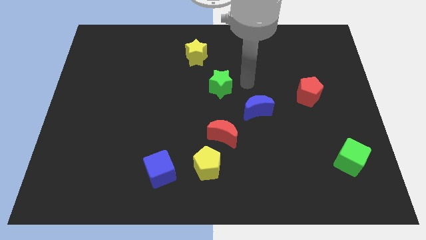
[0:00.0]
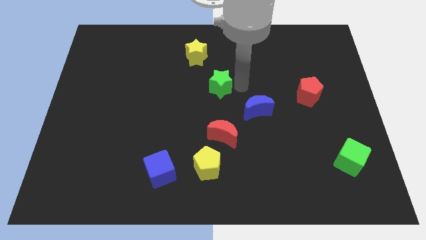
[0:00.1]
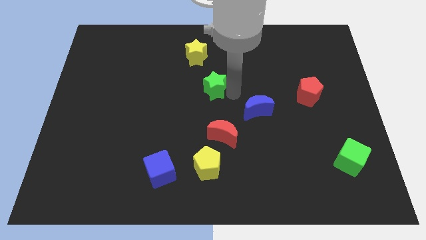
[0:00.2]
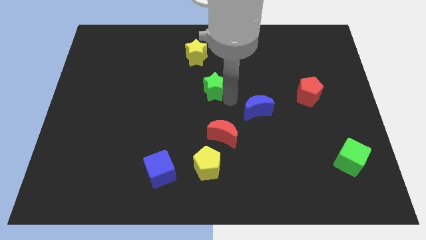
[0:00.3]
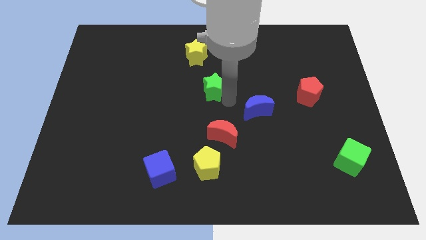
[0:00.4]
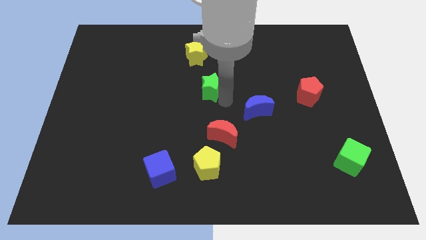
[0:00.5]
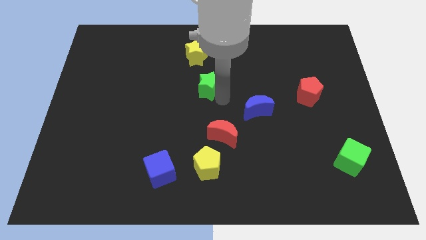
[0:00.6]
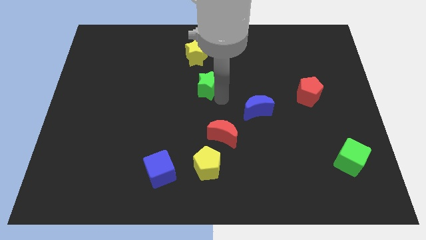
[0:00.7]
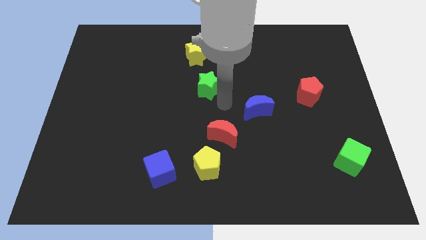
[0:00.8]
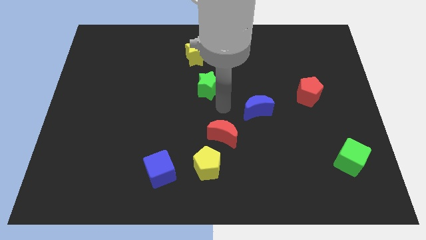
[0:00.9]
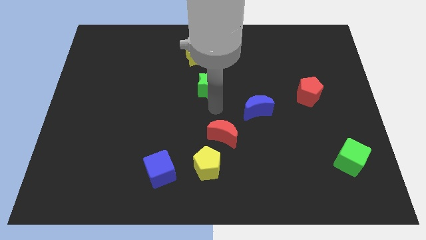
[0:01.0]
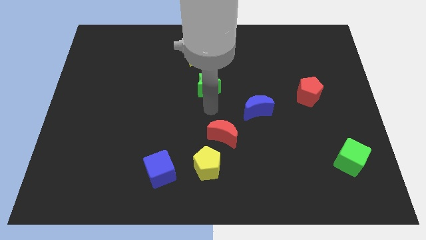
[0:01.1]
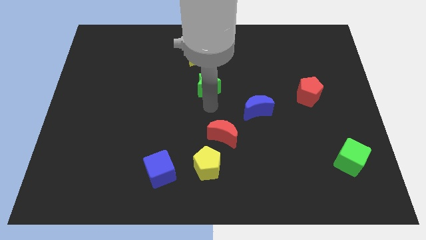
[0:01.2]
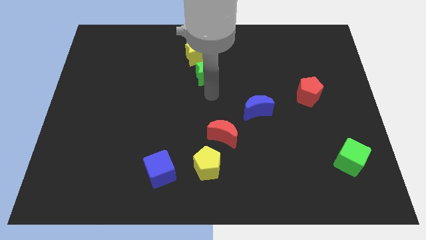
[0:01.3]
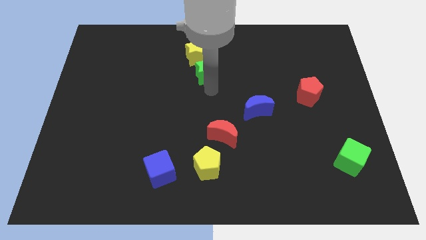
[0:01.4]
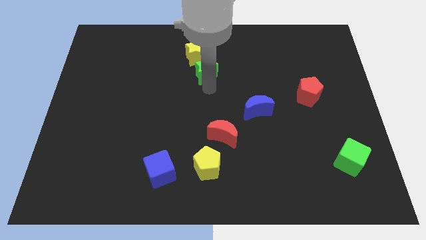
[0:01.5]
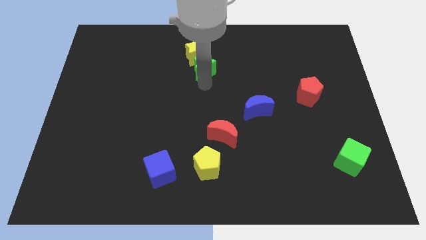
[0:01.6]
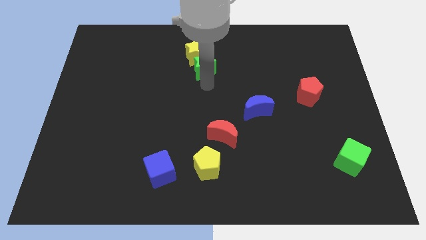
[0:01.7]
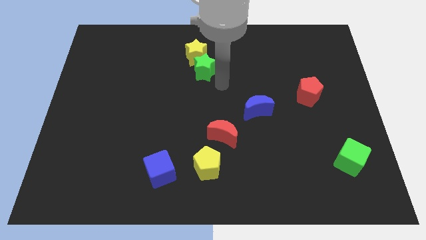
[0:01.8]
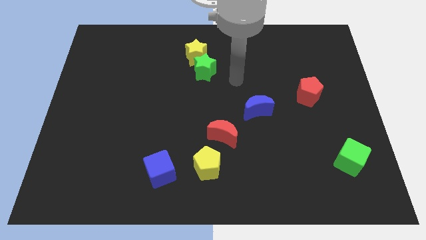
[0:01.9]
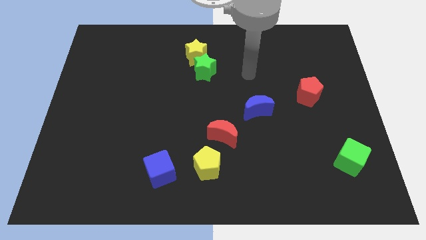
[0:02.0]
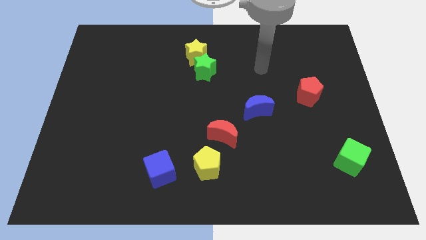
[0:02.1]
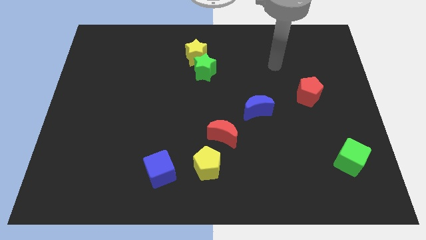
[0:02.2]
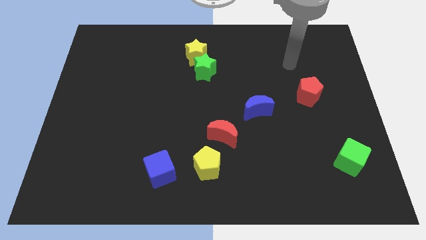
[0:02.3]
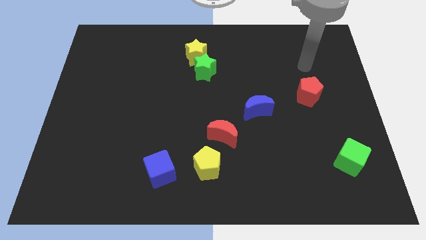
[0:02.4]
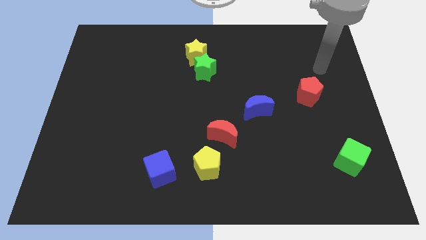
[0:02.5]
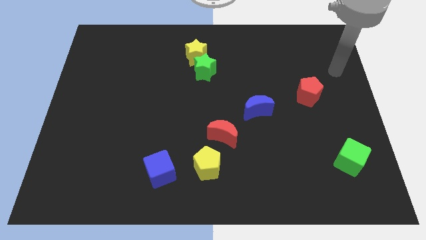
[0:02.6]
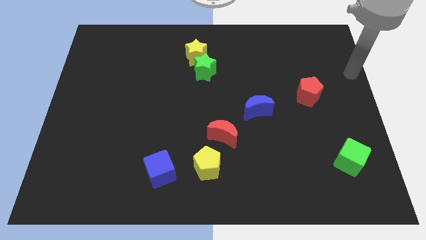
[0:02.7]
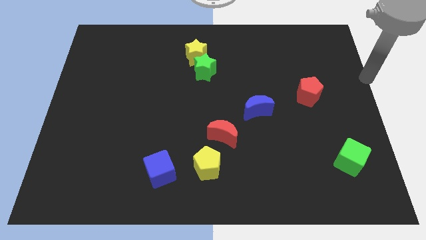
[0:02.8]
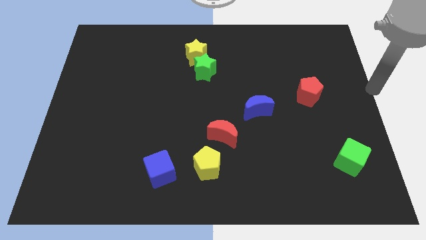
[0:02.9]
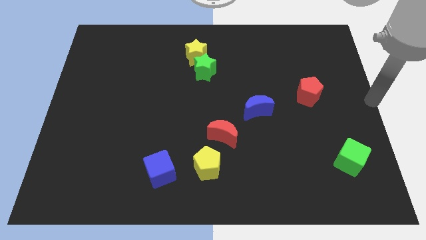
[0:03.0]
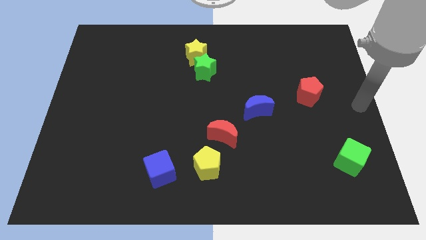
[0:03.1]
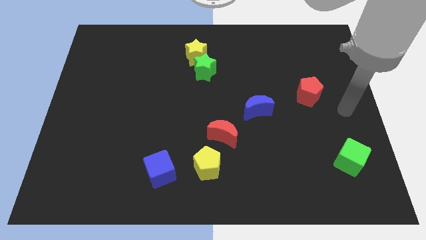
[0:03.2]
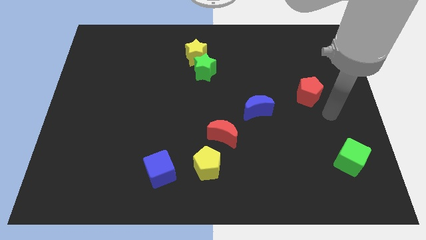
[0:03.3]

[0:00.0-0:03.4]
place green star close to yellow star

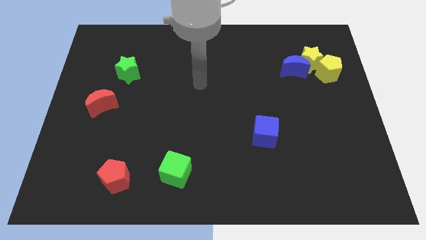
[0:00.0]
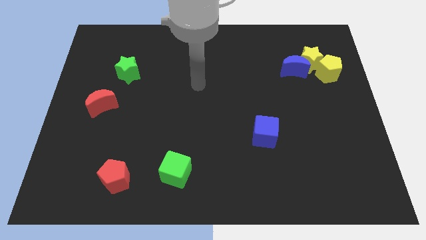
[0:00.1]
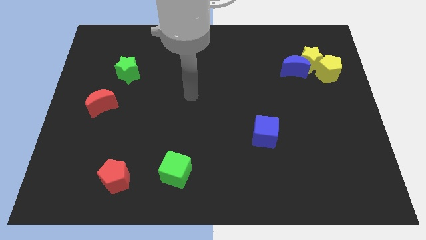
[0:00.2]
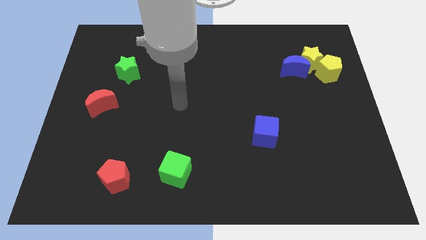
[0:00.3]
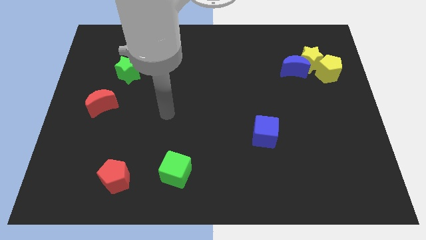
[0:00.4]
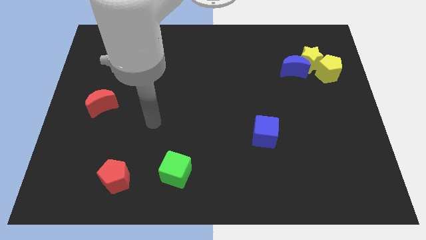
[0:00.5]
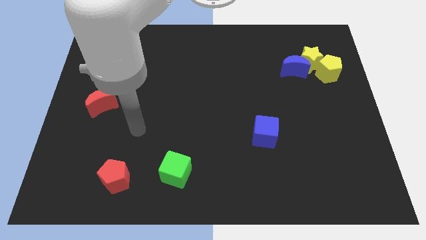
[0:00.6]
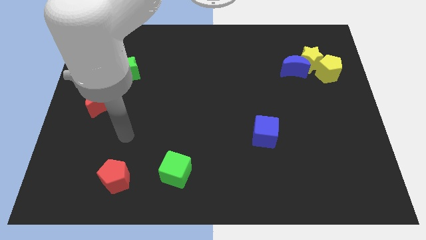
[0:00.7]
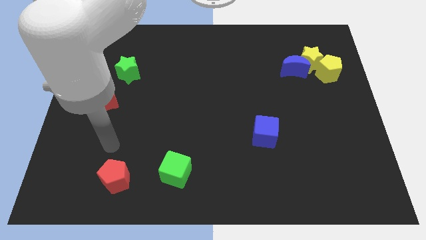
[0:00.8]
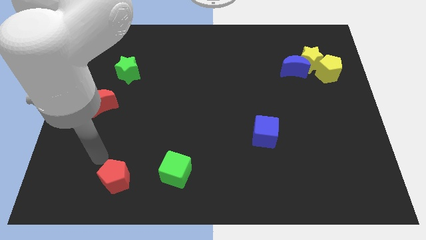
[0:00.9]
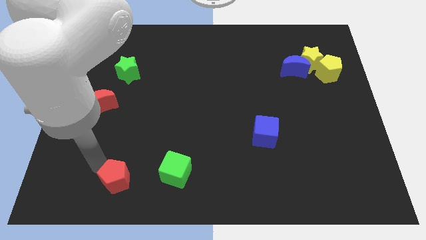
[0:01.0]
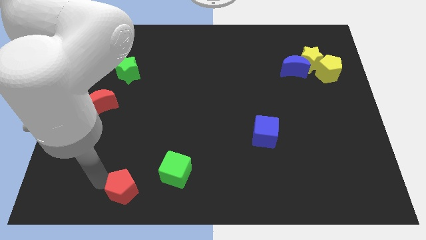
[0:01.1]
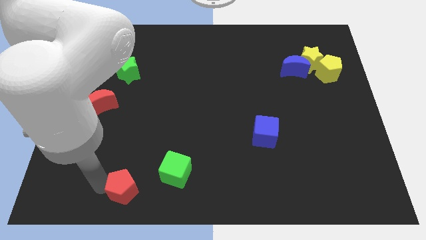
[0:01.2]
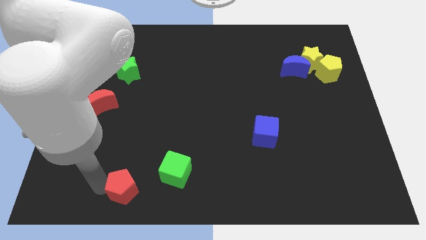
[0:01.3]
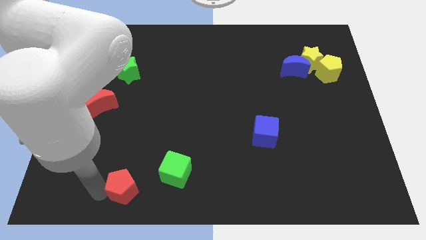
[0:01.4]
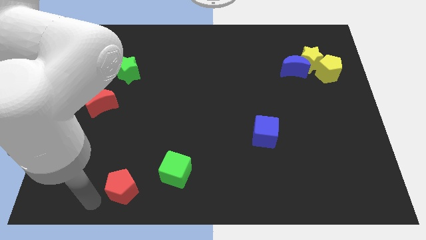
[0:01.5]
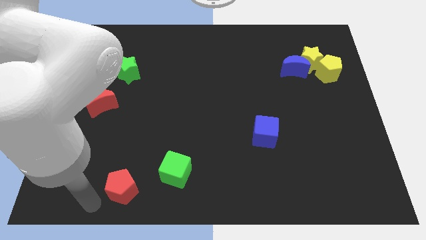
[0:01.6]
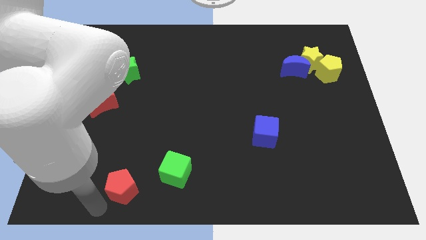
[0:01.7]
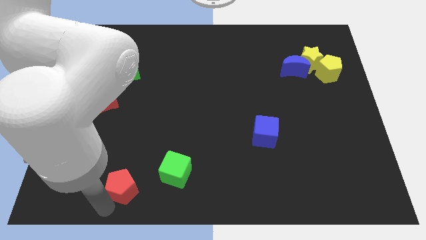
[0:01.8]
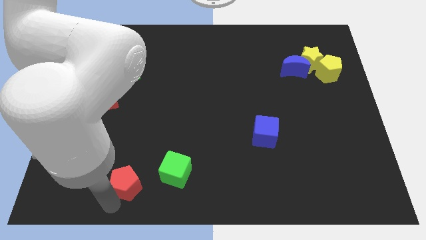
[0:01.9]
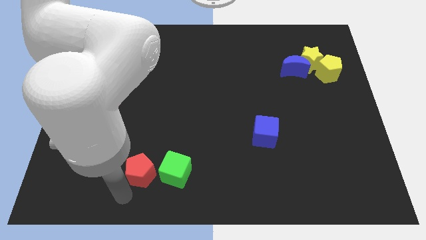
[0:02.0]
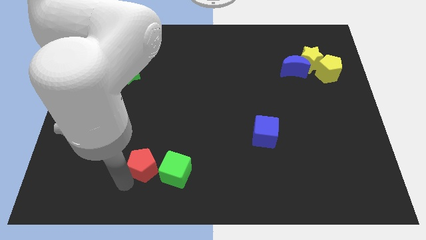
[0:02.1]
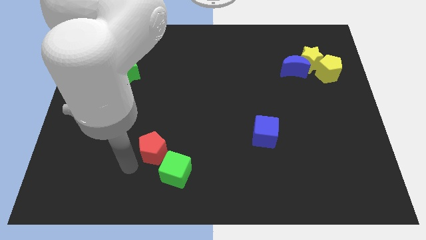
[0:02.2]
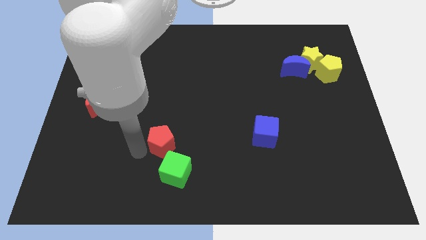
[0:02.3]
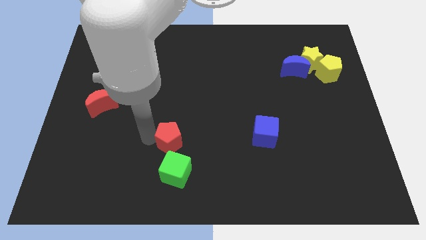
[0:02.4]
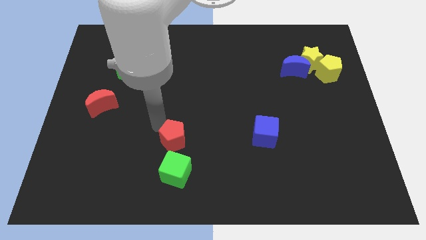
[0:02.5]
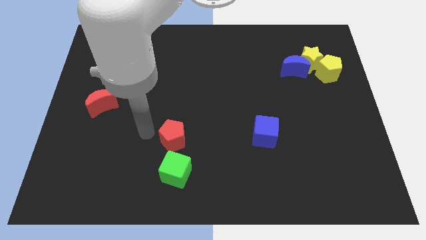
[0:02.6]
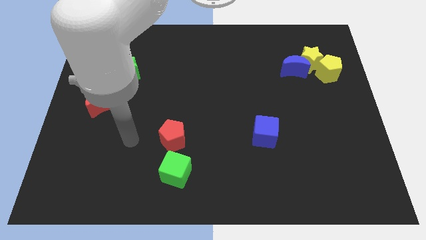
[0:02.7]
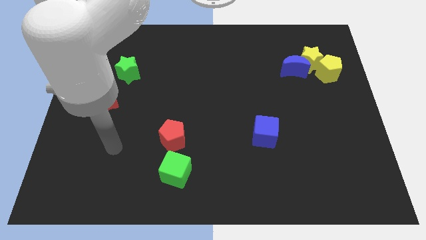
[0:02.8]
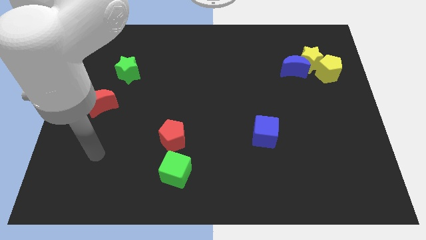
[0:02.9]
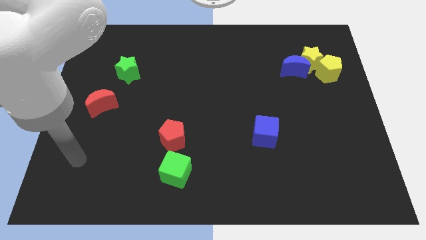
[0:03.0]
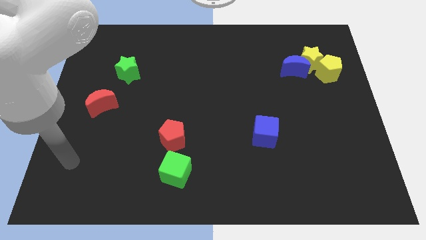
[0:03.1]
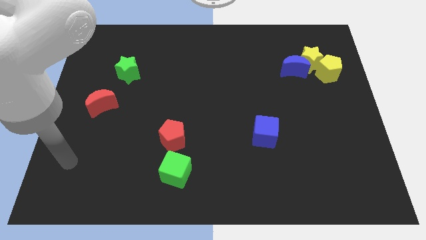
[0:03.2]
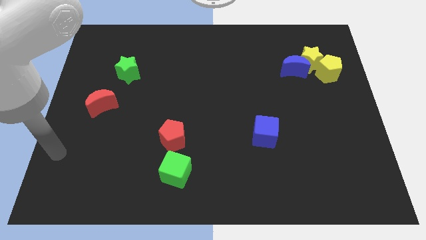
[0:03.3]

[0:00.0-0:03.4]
move the red pentagon to the top of the green cube

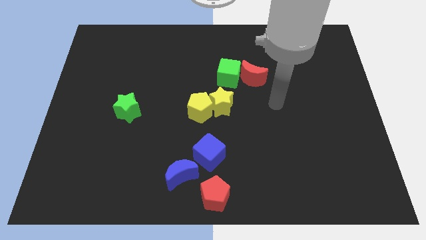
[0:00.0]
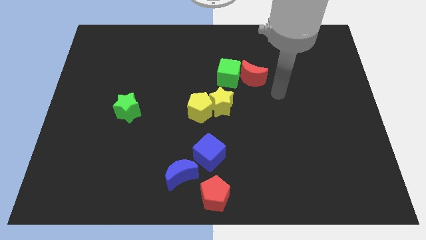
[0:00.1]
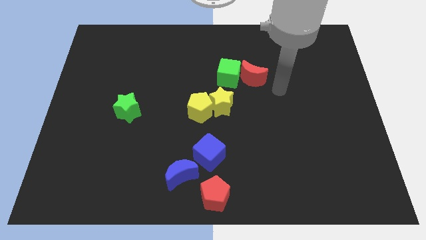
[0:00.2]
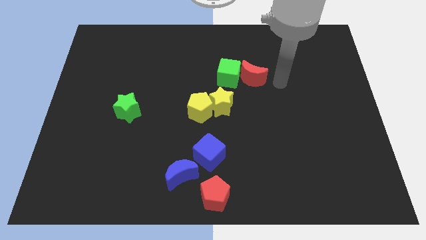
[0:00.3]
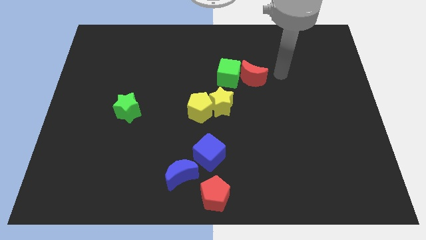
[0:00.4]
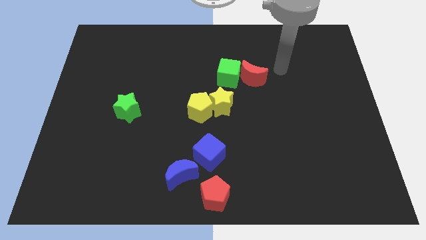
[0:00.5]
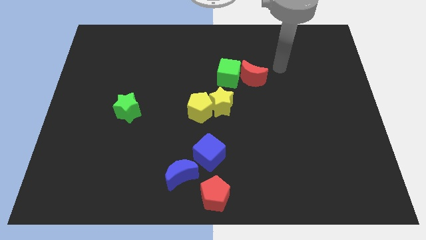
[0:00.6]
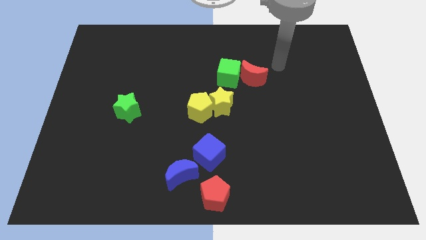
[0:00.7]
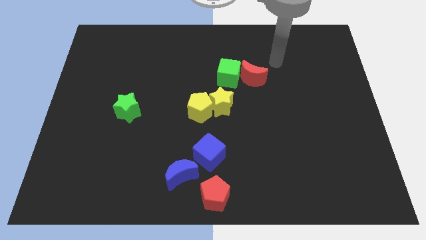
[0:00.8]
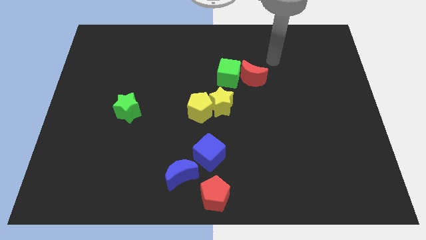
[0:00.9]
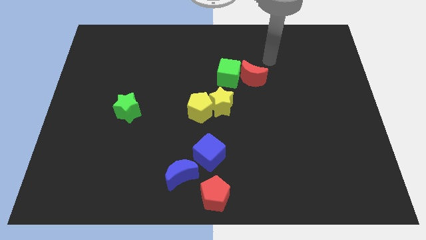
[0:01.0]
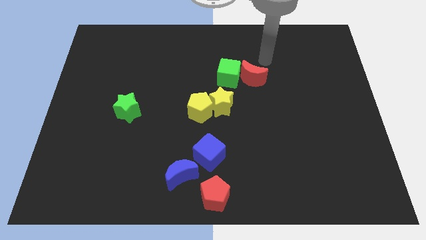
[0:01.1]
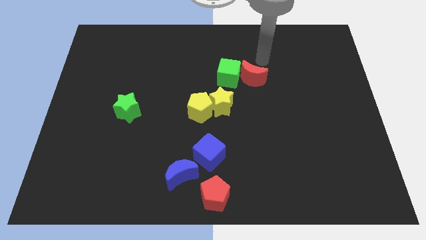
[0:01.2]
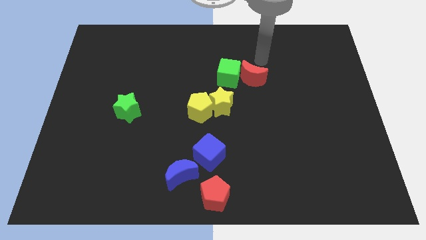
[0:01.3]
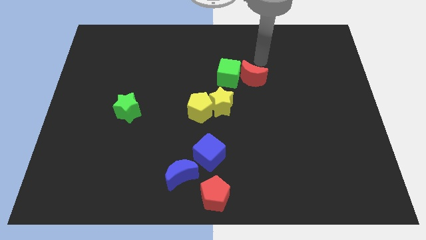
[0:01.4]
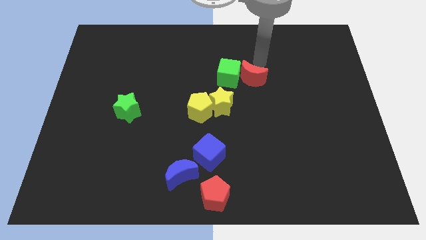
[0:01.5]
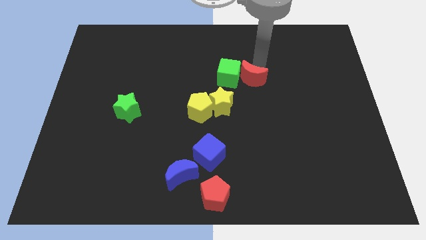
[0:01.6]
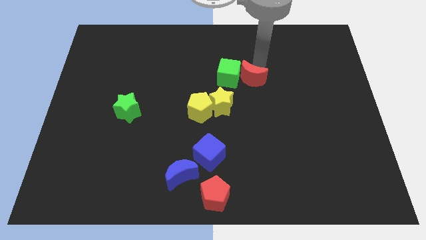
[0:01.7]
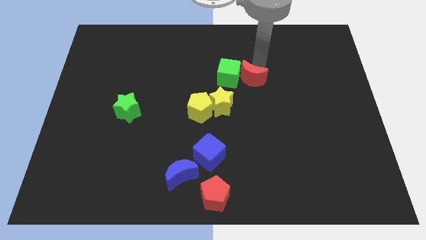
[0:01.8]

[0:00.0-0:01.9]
place the pointer on the top of red moon
